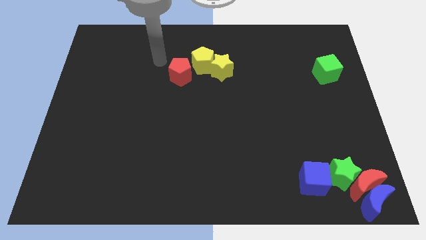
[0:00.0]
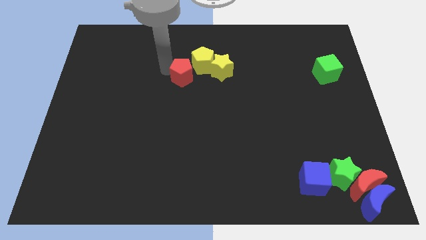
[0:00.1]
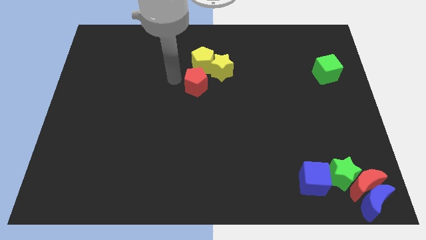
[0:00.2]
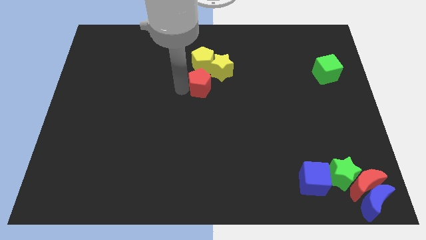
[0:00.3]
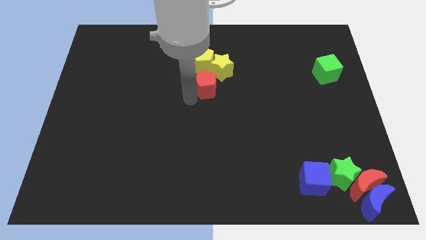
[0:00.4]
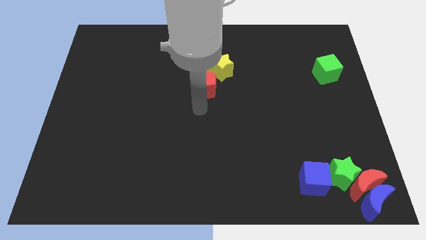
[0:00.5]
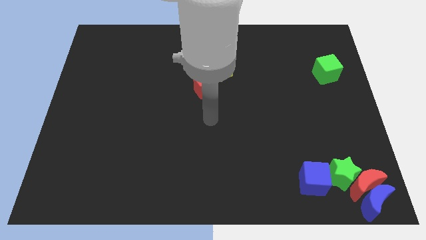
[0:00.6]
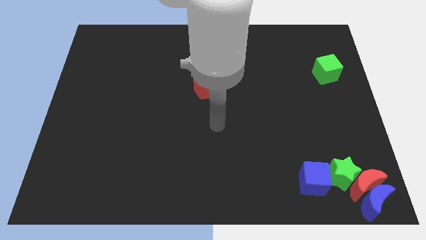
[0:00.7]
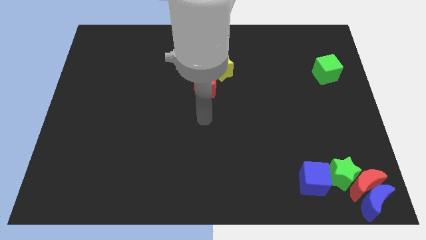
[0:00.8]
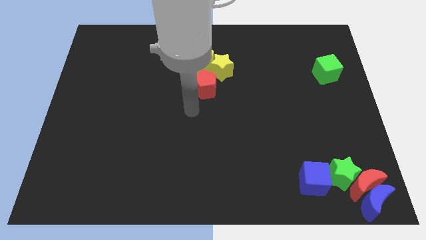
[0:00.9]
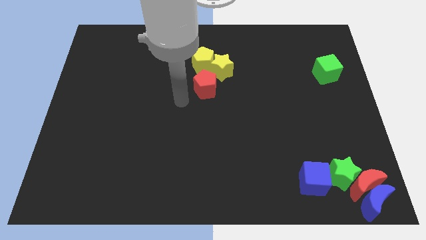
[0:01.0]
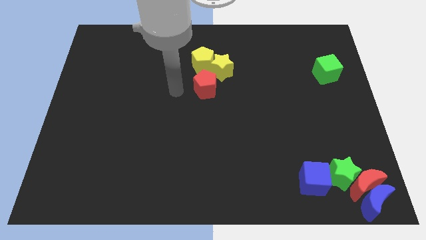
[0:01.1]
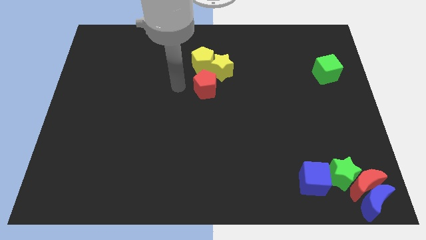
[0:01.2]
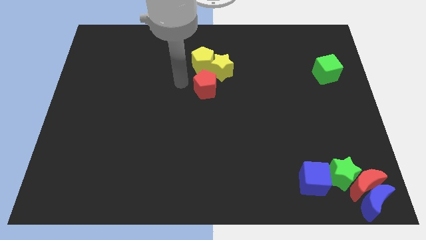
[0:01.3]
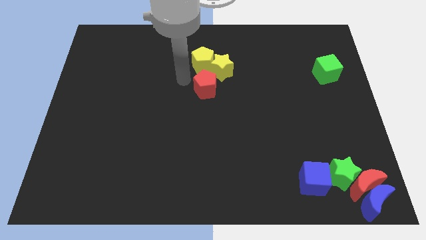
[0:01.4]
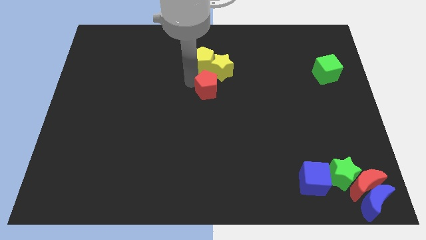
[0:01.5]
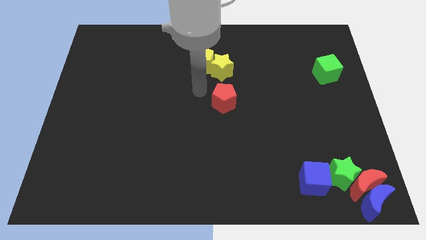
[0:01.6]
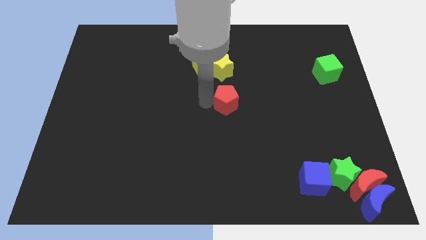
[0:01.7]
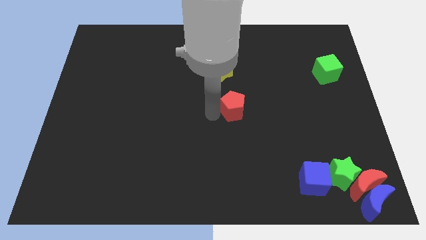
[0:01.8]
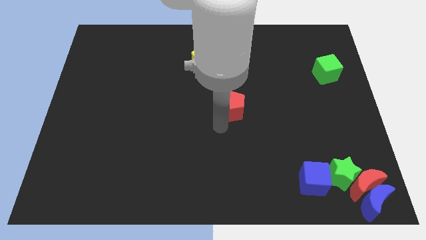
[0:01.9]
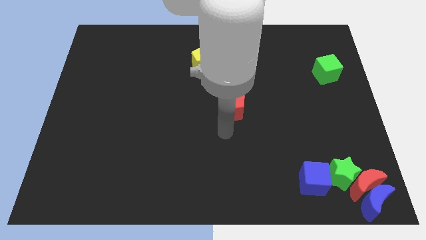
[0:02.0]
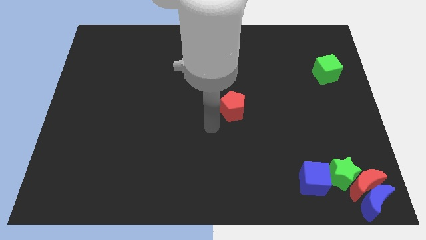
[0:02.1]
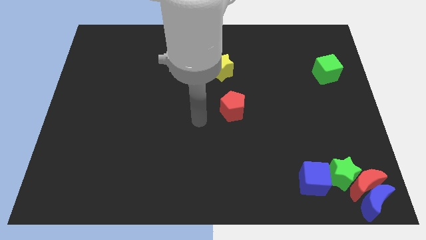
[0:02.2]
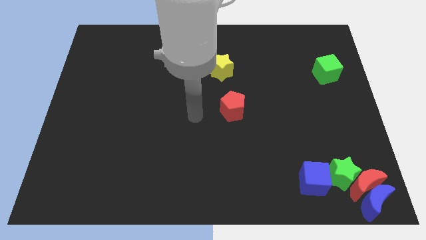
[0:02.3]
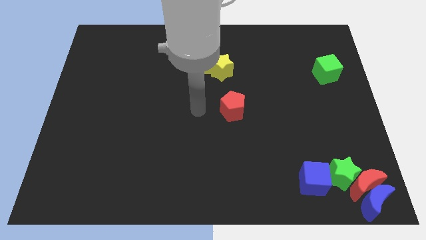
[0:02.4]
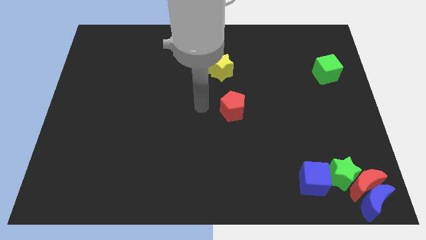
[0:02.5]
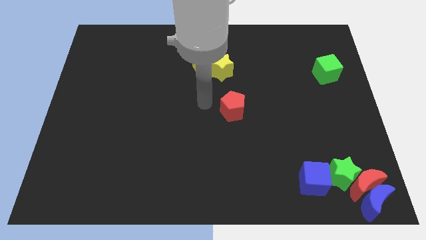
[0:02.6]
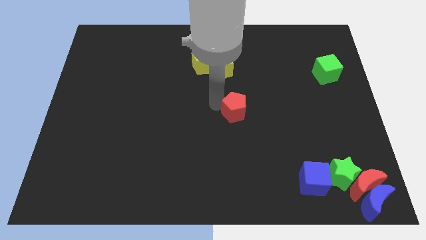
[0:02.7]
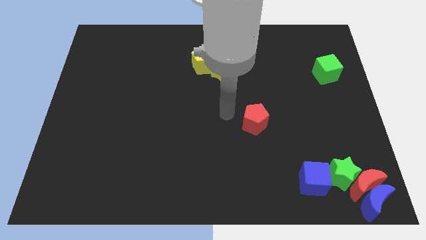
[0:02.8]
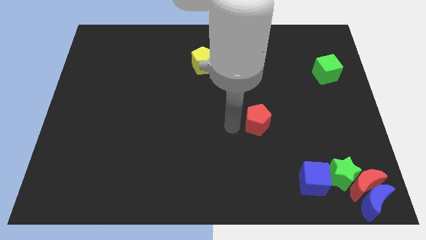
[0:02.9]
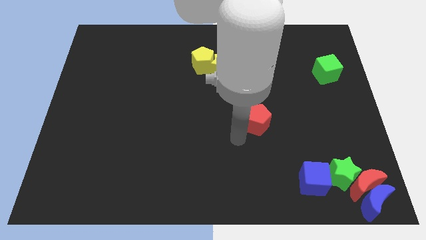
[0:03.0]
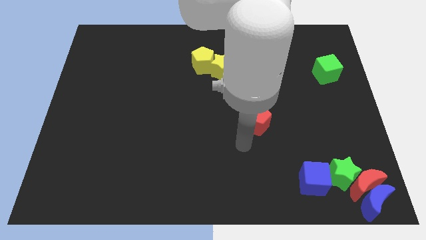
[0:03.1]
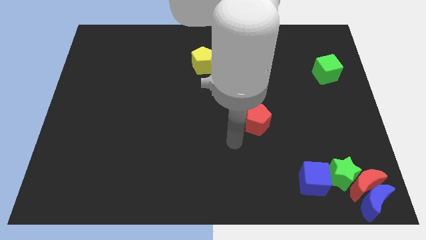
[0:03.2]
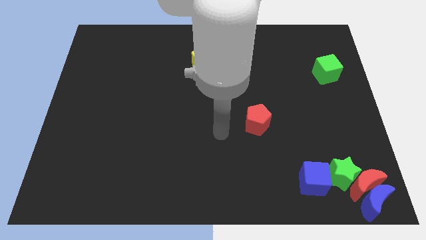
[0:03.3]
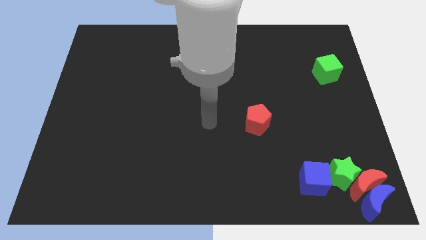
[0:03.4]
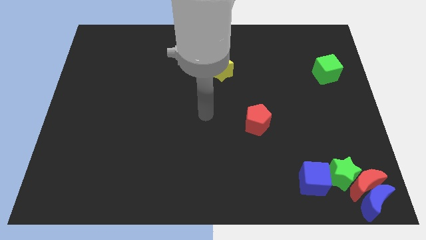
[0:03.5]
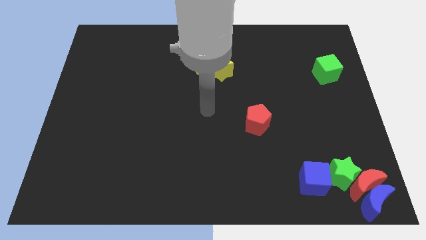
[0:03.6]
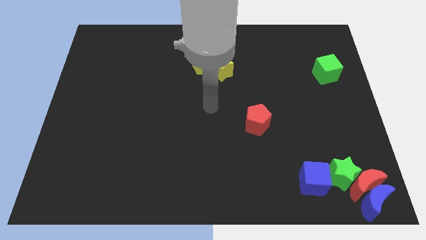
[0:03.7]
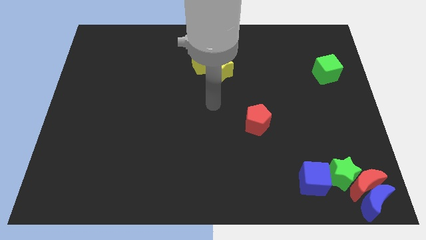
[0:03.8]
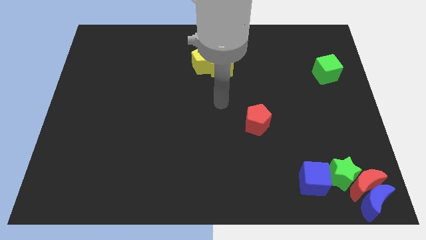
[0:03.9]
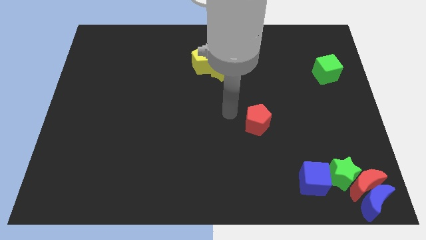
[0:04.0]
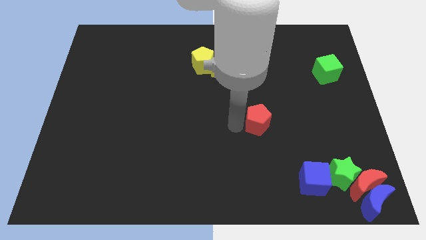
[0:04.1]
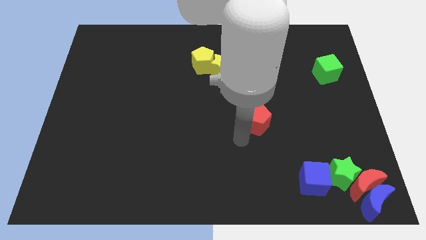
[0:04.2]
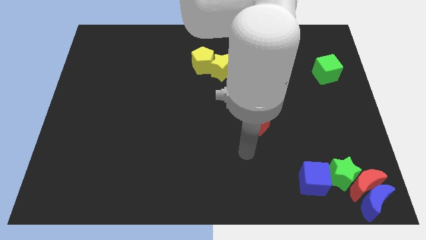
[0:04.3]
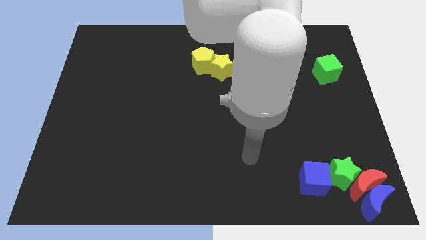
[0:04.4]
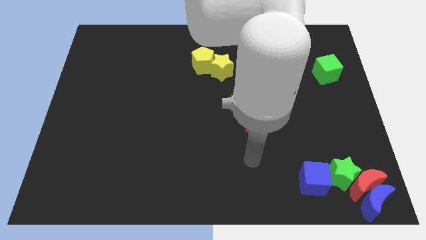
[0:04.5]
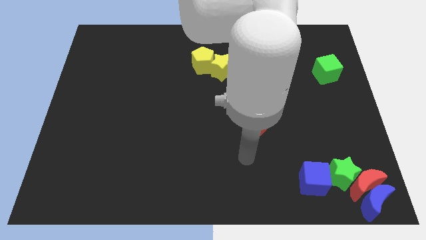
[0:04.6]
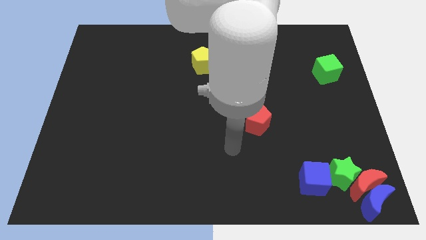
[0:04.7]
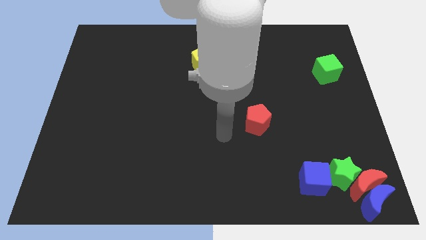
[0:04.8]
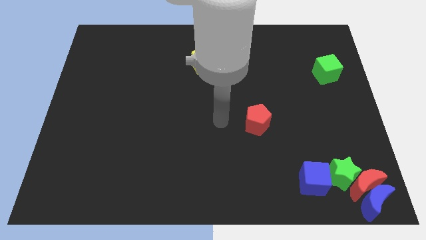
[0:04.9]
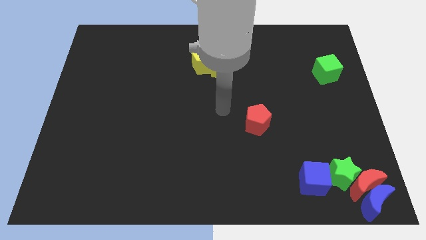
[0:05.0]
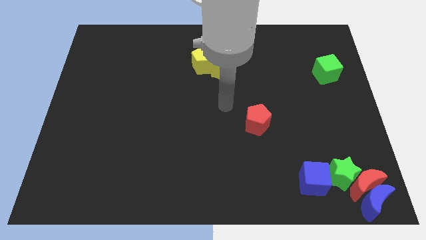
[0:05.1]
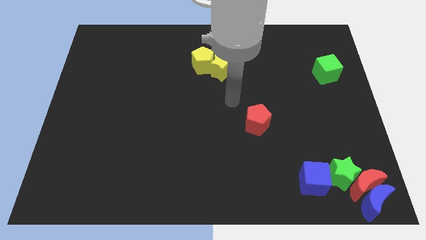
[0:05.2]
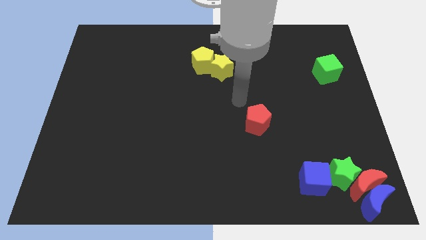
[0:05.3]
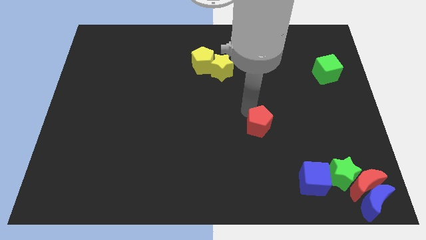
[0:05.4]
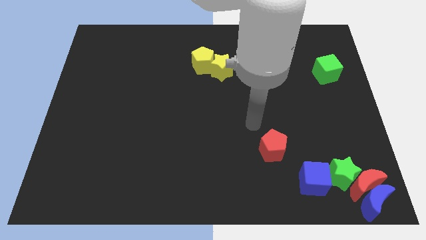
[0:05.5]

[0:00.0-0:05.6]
slide the red pentagon towards the blue cube

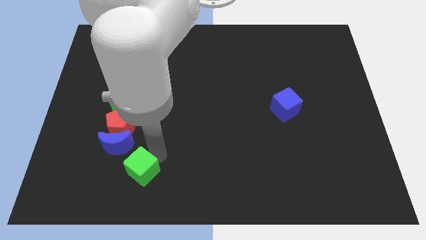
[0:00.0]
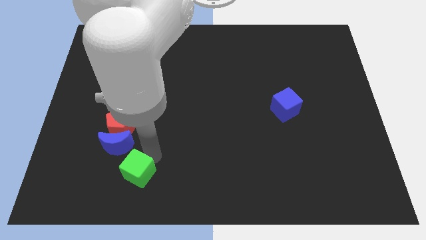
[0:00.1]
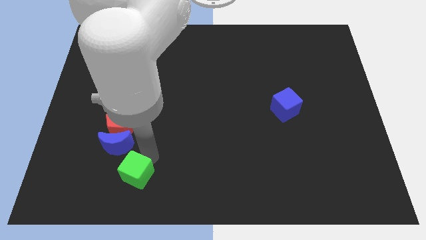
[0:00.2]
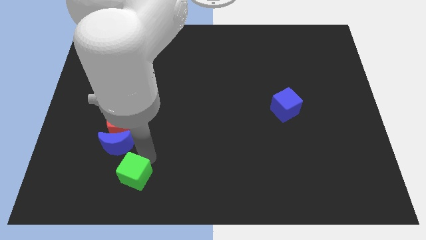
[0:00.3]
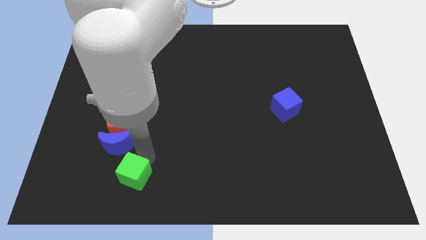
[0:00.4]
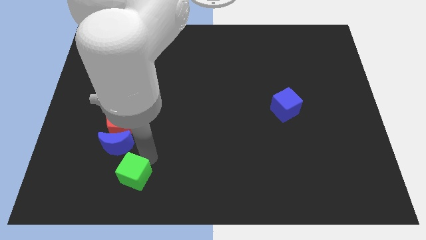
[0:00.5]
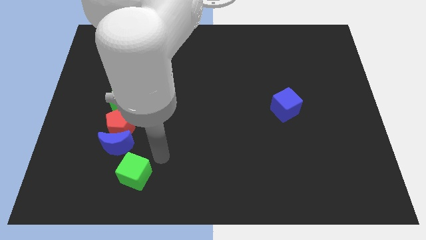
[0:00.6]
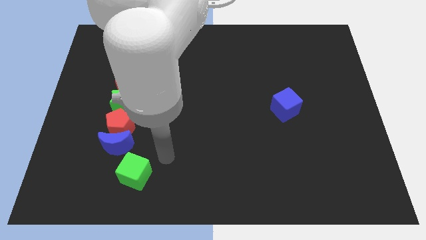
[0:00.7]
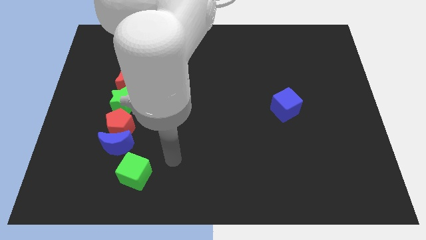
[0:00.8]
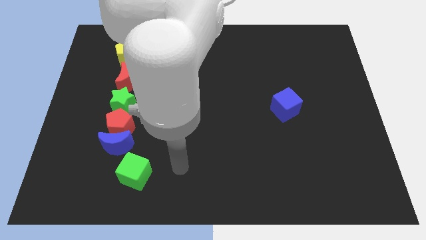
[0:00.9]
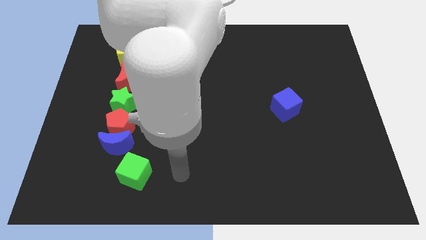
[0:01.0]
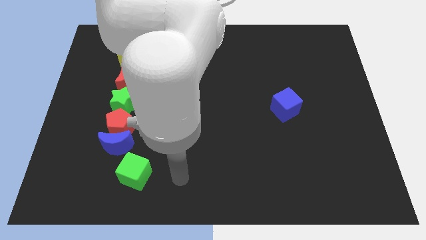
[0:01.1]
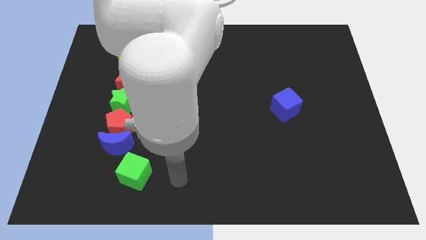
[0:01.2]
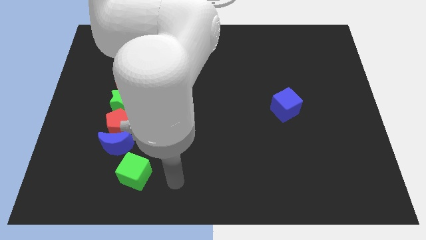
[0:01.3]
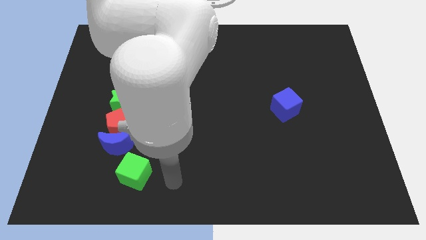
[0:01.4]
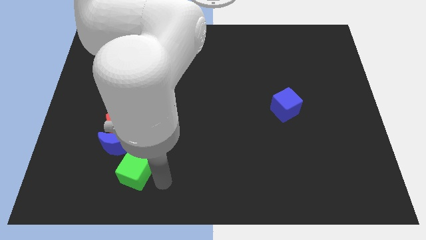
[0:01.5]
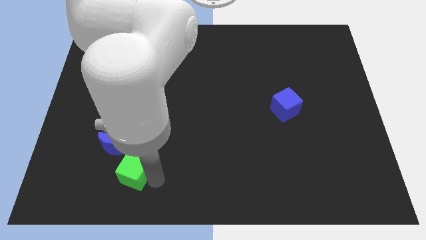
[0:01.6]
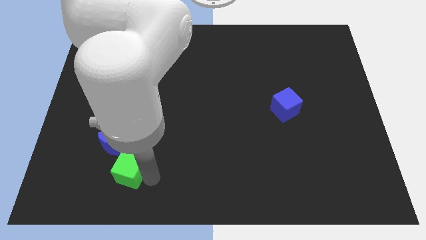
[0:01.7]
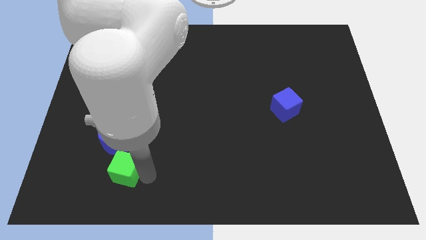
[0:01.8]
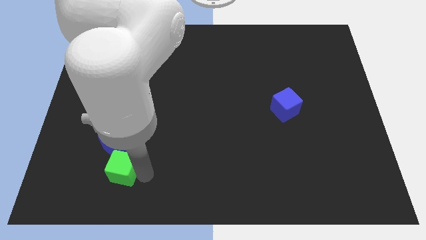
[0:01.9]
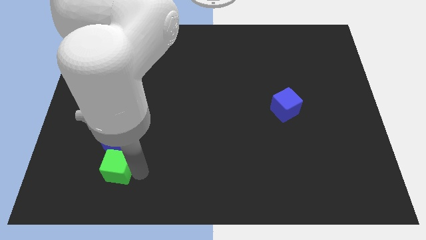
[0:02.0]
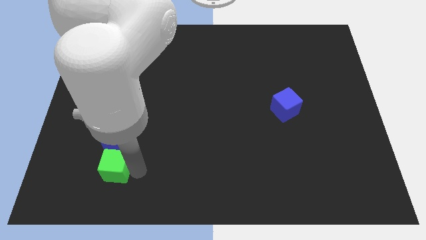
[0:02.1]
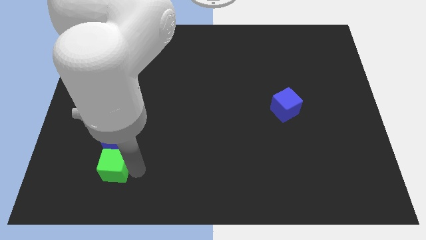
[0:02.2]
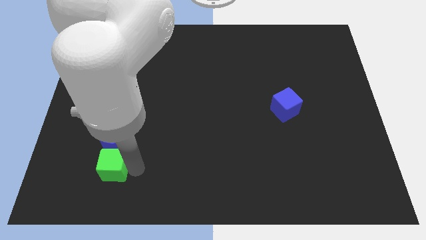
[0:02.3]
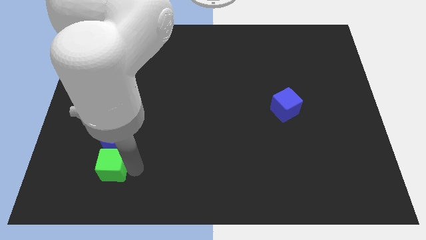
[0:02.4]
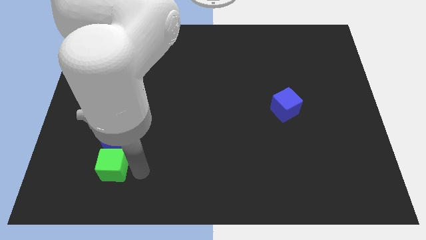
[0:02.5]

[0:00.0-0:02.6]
place the green cube below the blue moon

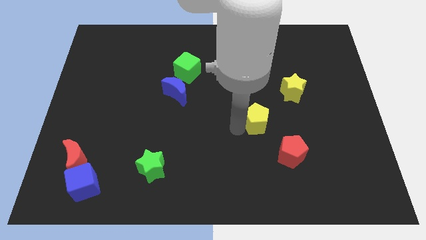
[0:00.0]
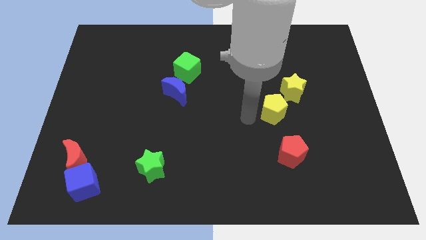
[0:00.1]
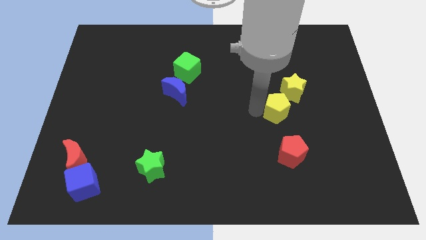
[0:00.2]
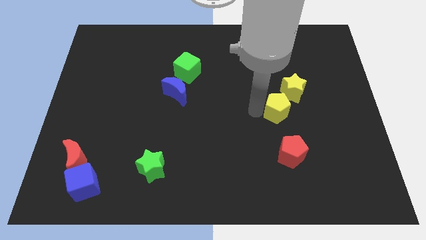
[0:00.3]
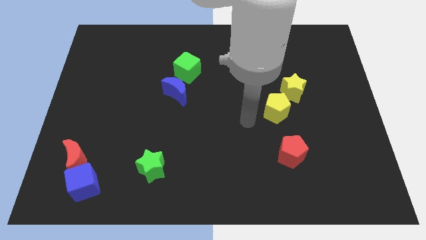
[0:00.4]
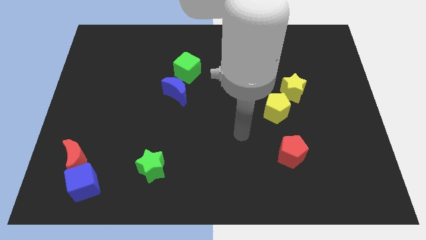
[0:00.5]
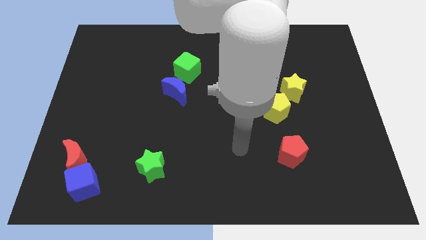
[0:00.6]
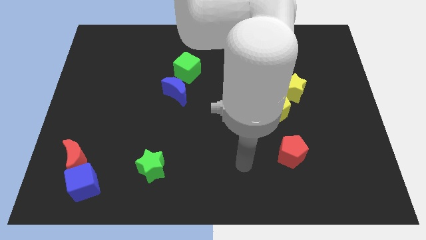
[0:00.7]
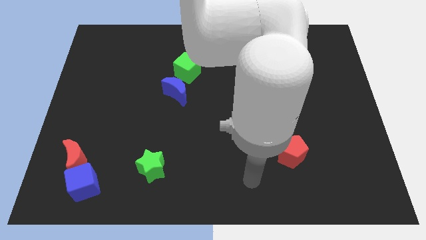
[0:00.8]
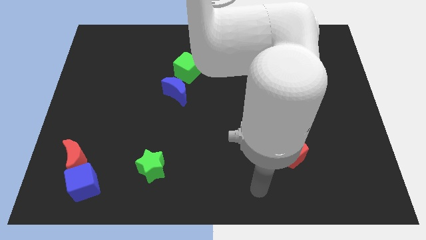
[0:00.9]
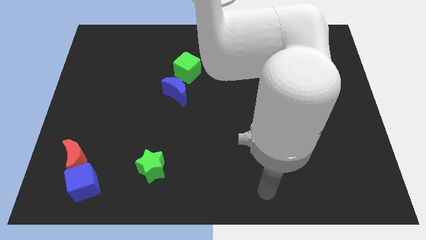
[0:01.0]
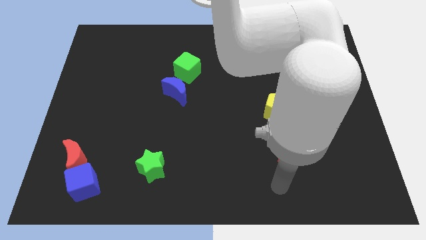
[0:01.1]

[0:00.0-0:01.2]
push the yellow pentagon into the yellow star diagonally
